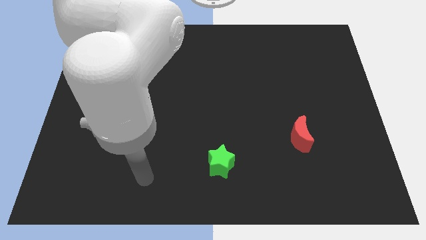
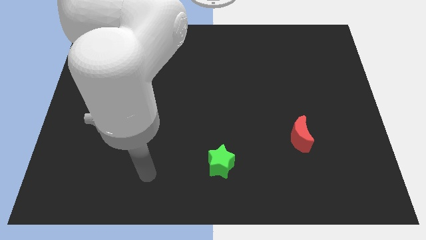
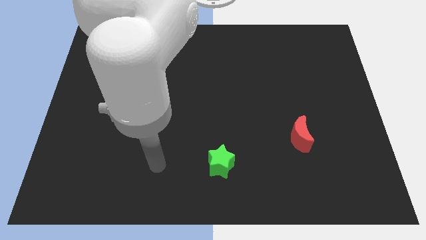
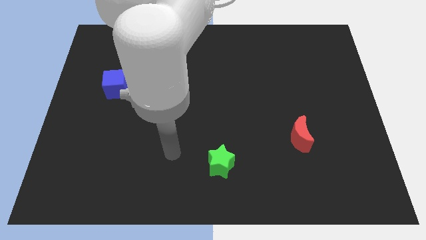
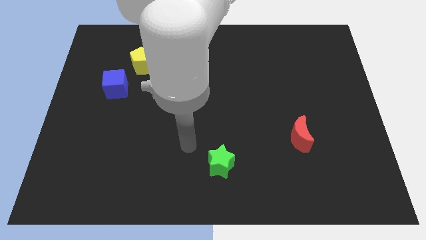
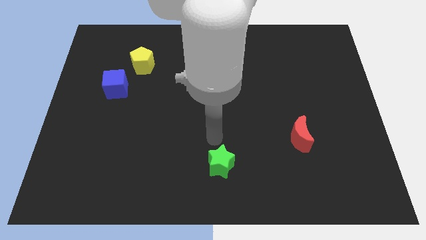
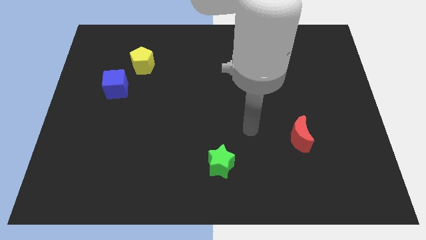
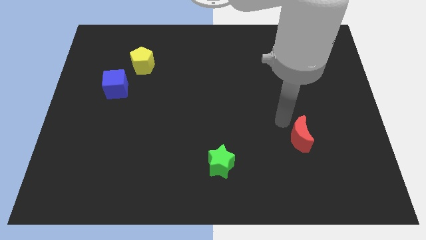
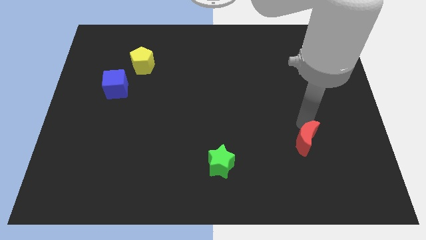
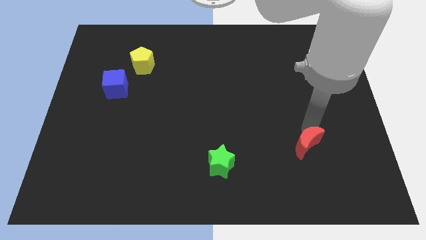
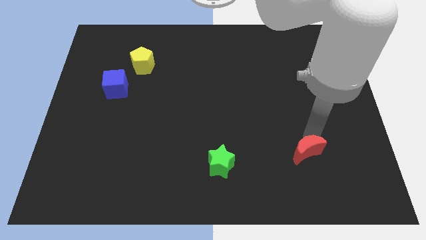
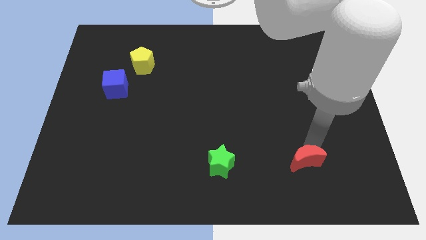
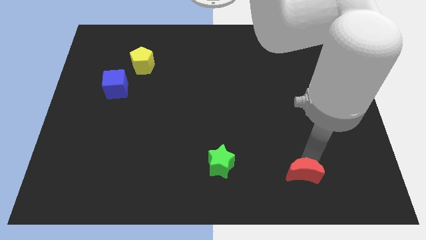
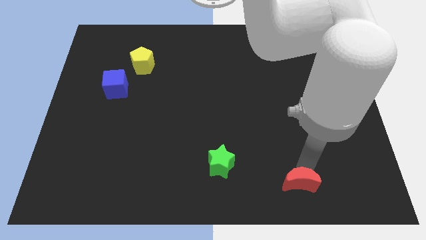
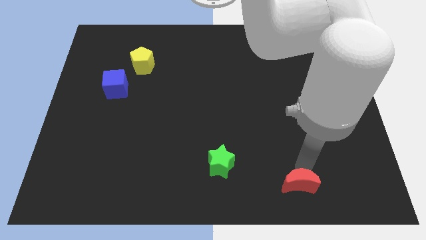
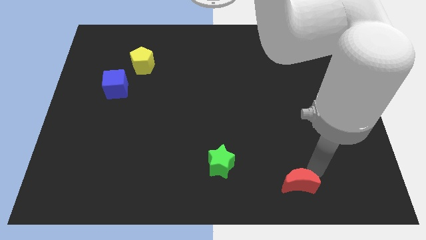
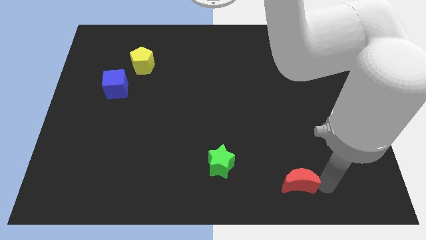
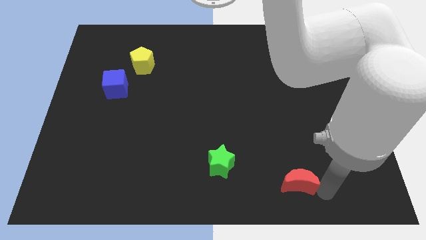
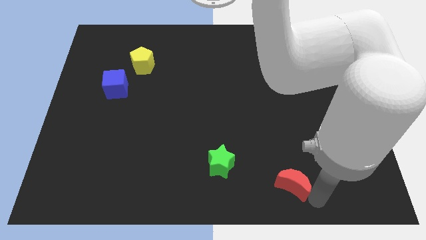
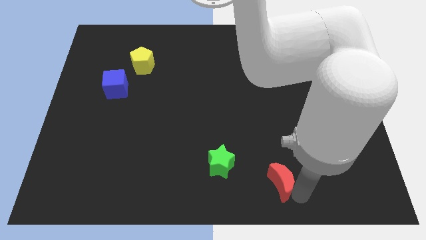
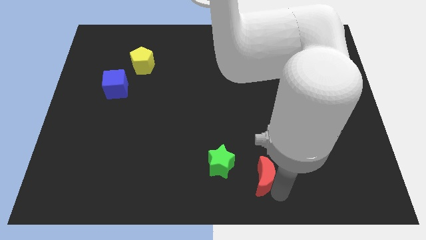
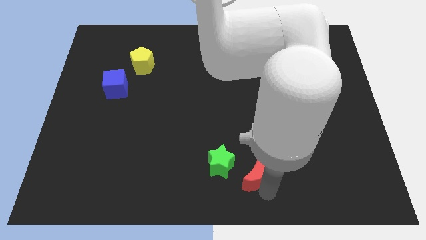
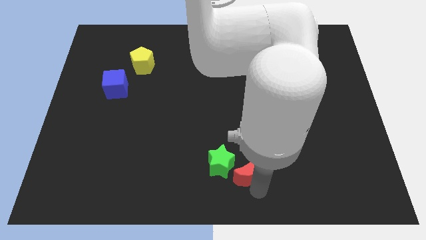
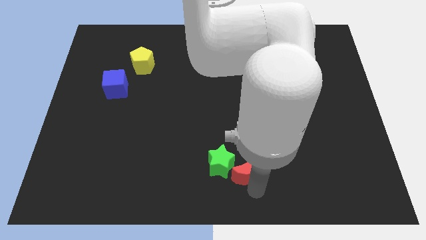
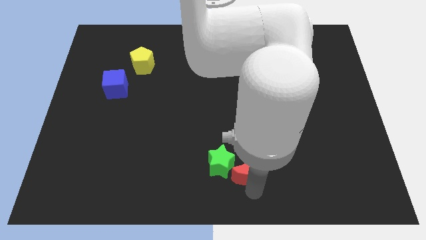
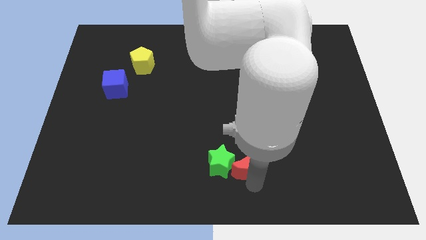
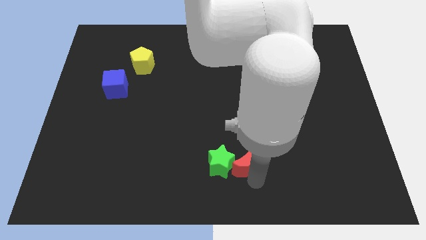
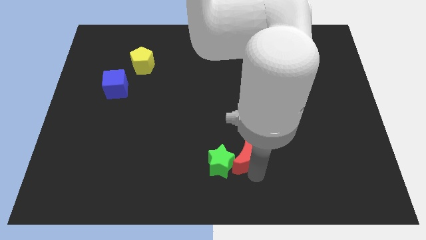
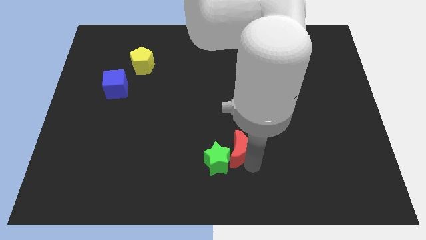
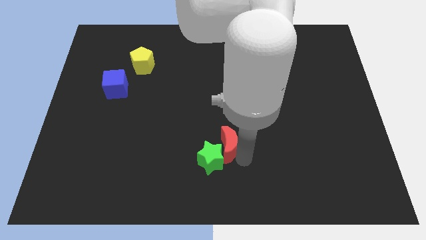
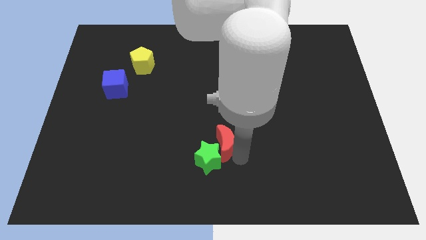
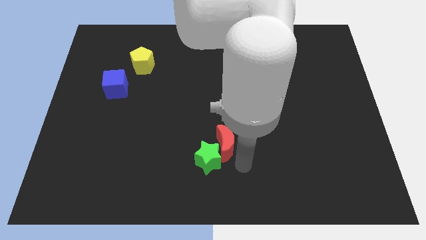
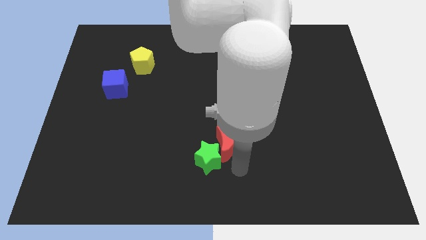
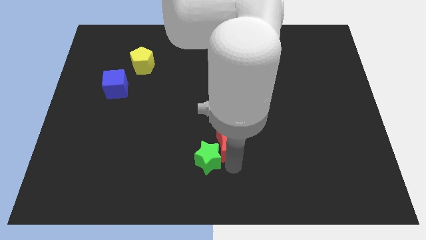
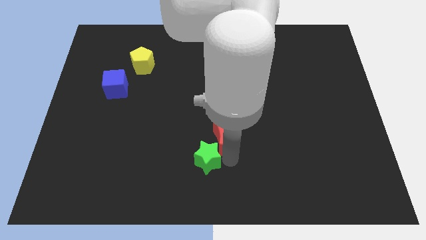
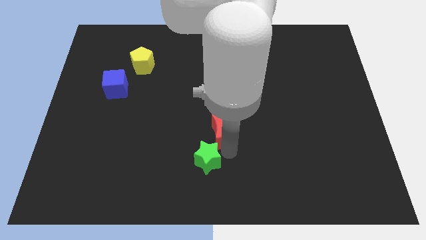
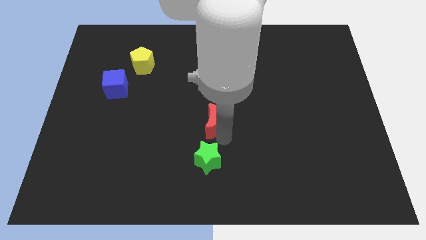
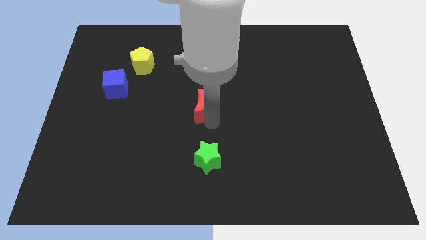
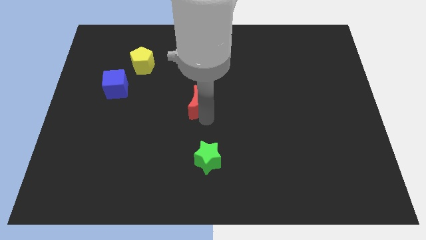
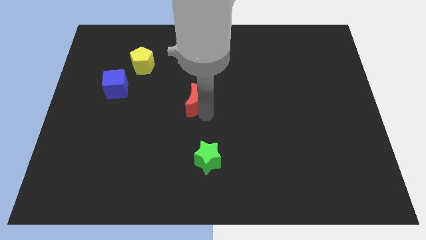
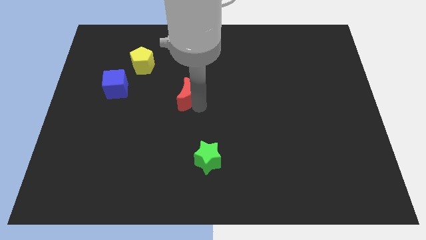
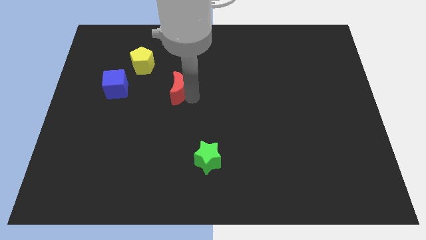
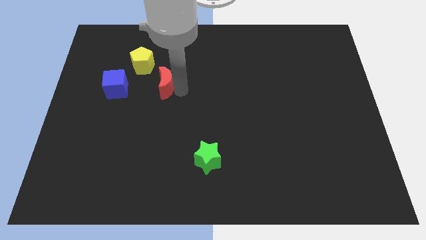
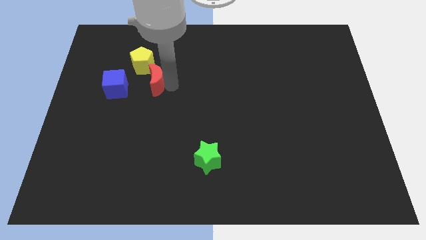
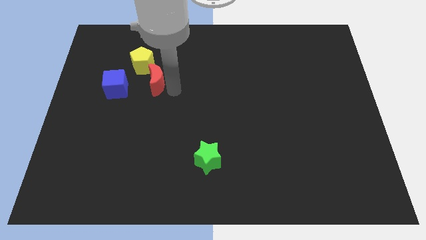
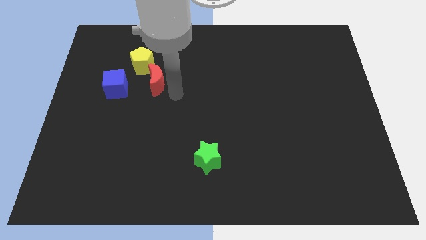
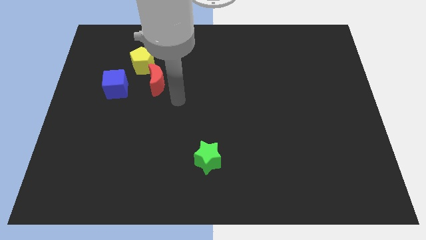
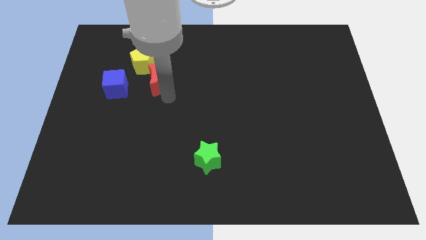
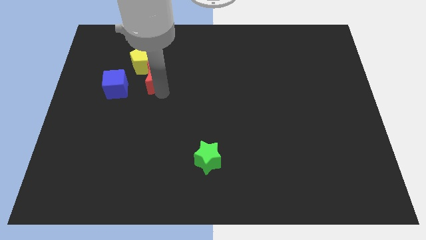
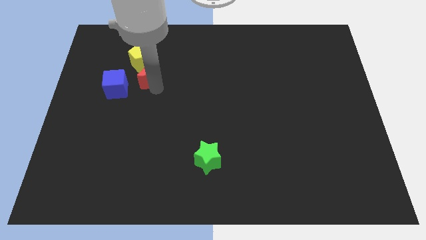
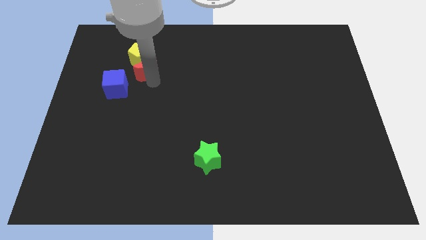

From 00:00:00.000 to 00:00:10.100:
put the moon towards the yellow block

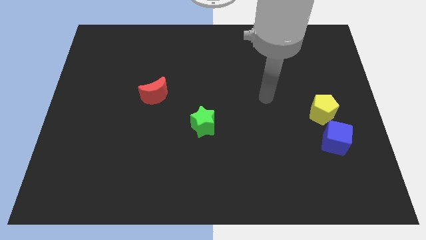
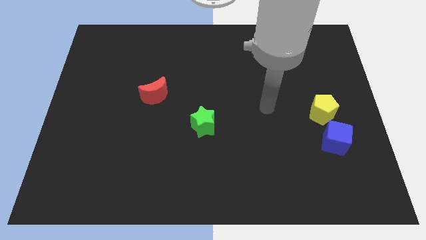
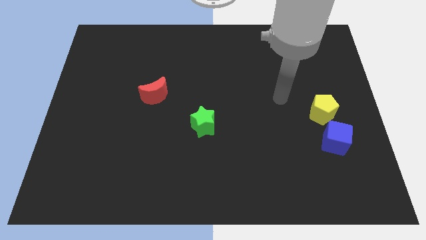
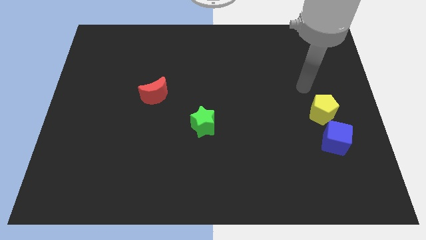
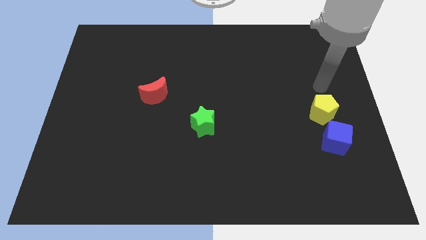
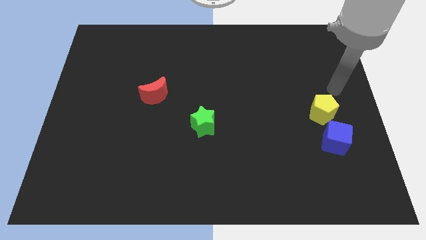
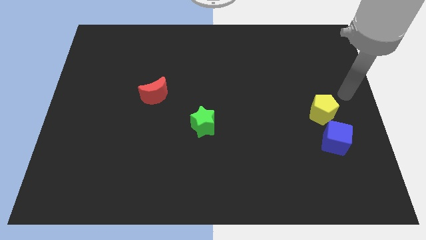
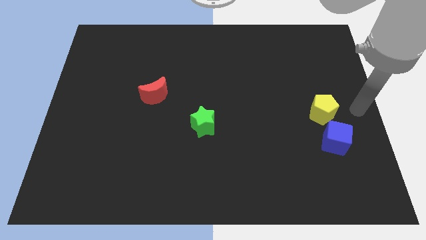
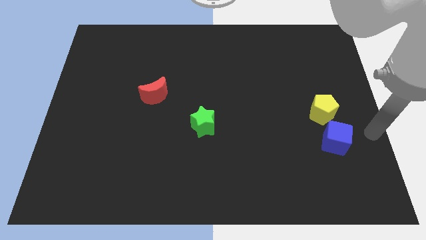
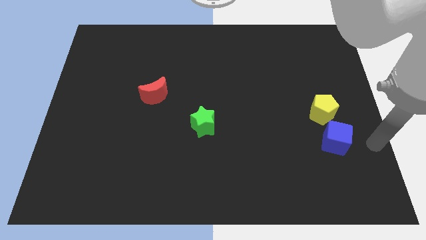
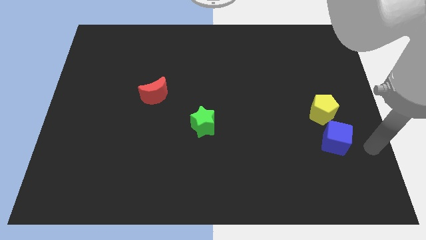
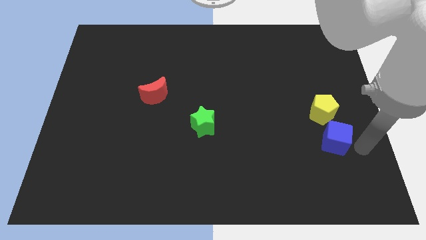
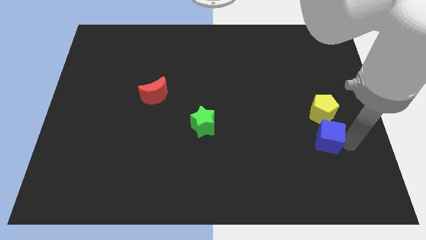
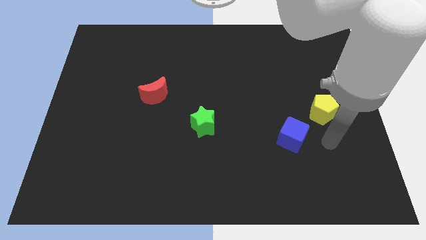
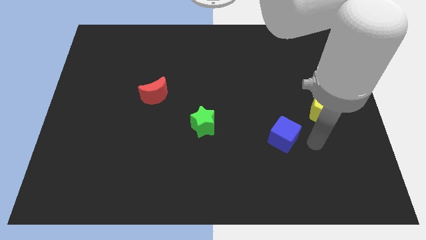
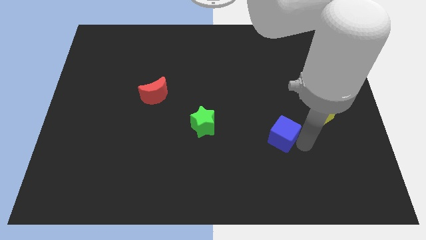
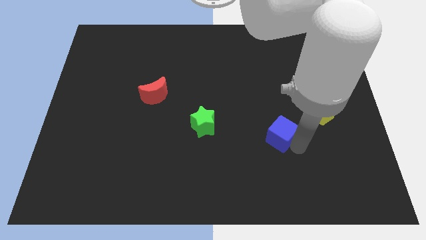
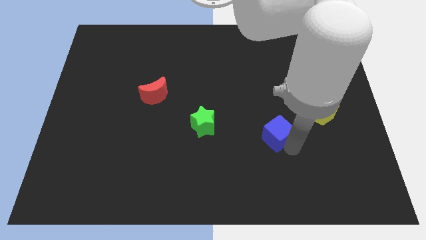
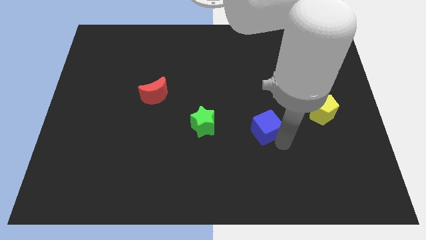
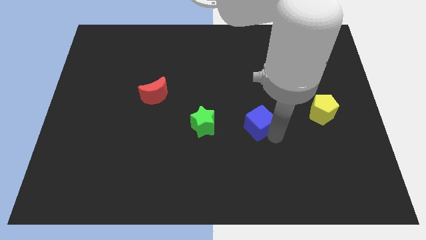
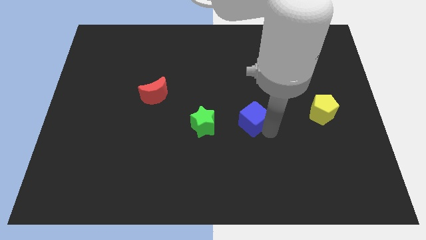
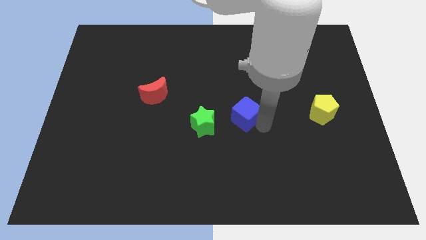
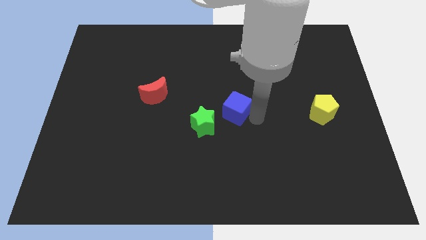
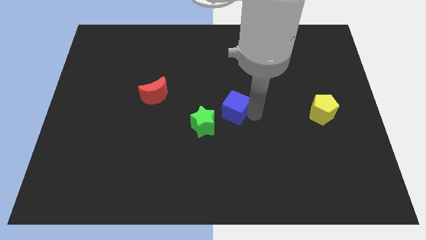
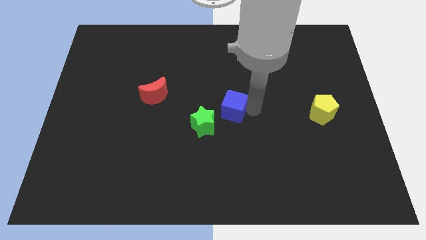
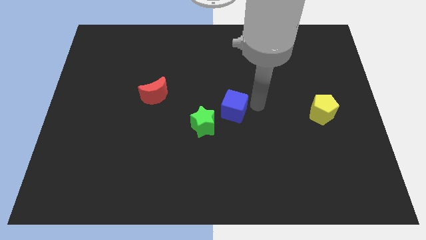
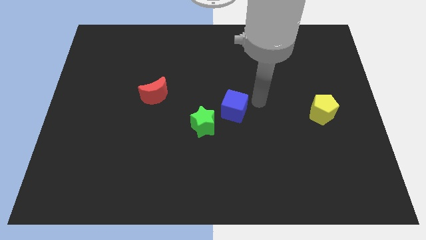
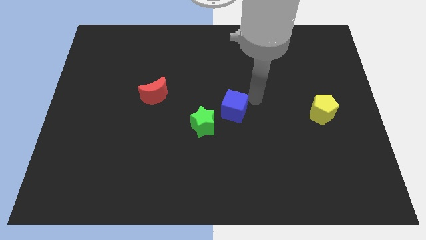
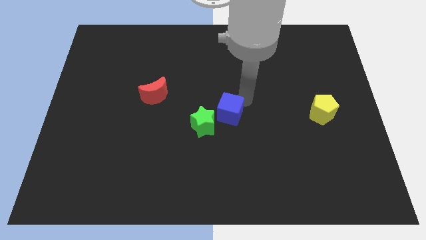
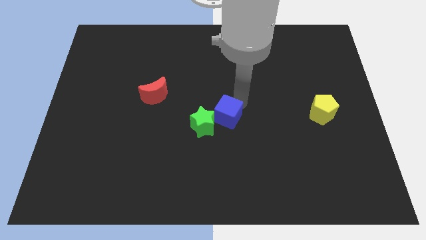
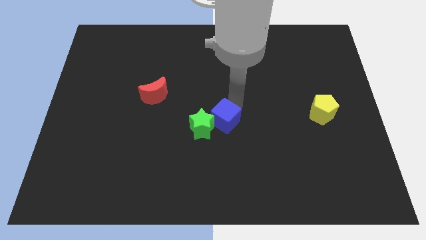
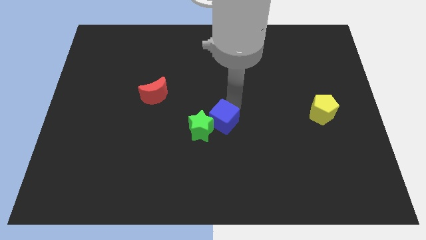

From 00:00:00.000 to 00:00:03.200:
slide the cube to the green block

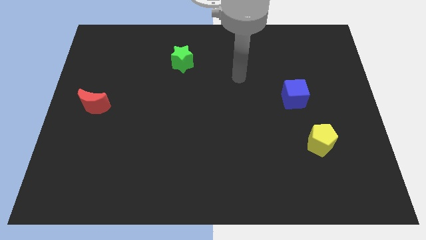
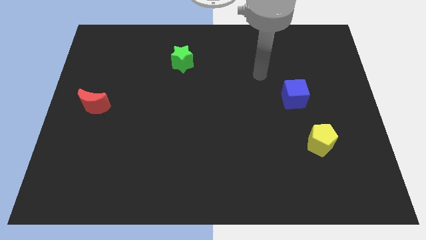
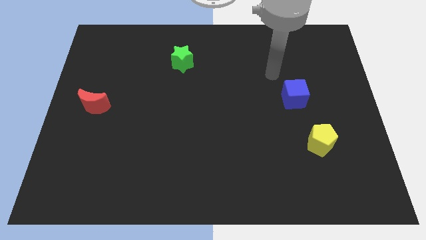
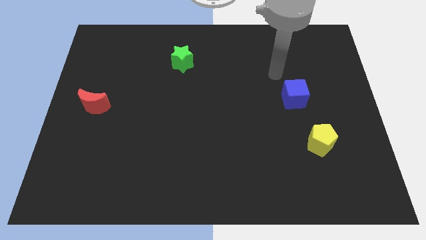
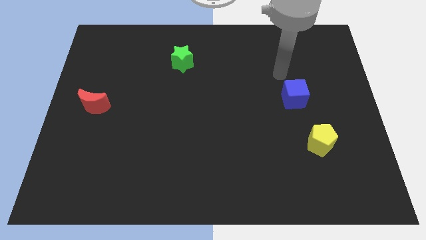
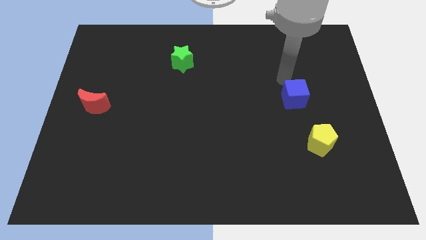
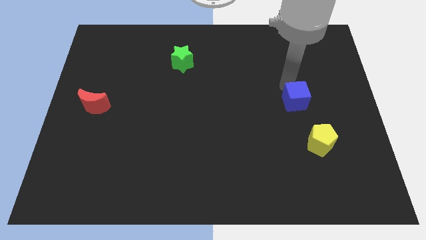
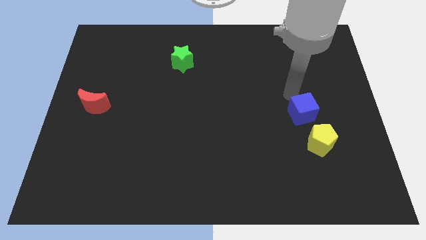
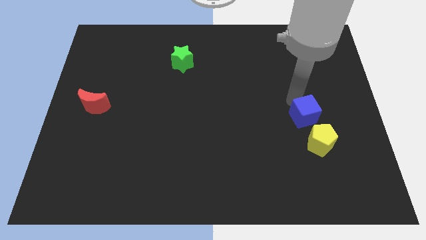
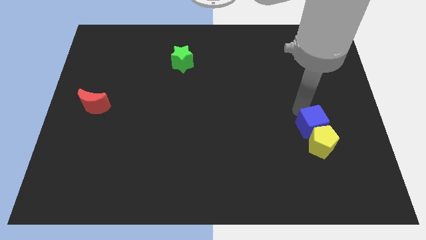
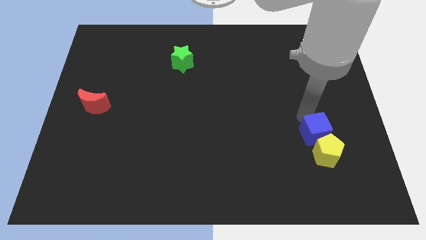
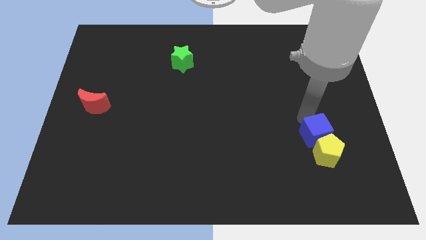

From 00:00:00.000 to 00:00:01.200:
slide the blue cube towards the yellow pentagon
